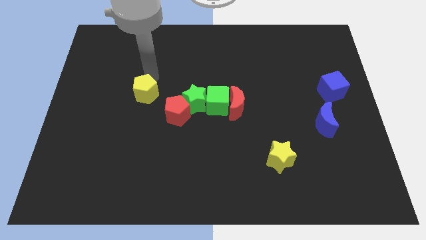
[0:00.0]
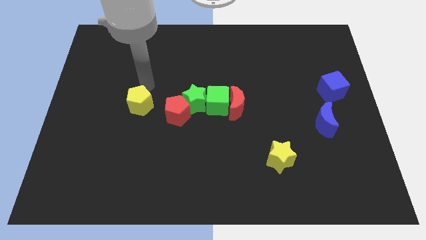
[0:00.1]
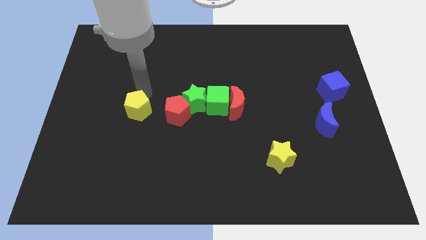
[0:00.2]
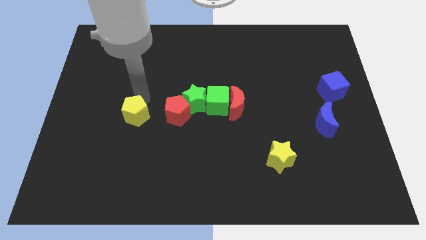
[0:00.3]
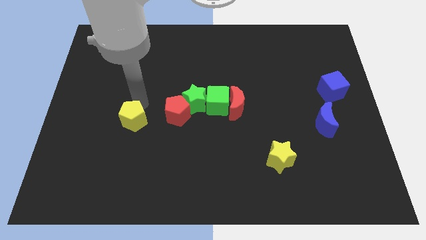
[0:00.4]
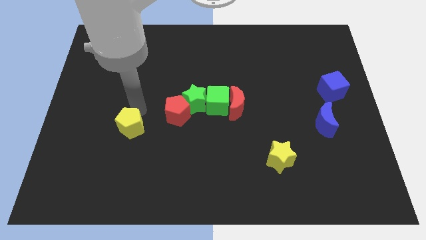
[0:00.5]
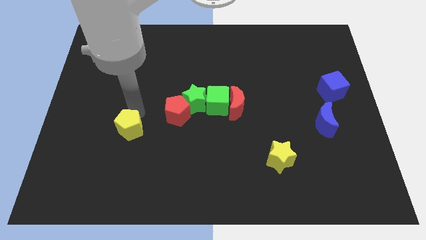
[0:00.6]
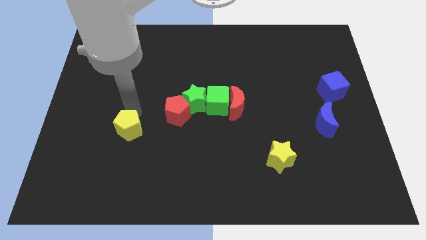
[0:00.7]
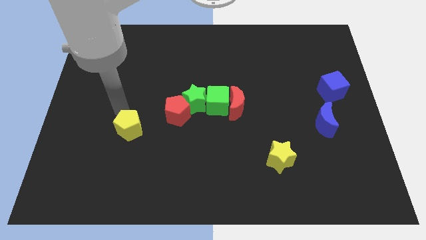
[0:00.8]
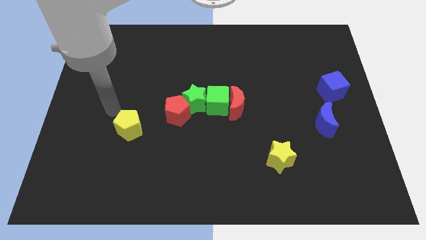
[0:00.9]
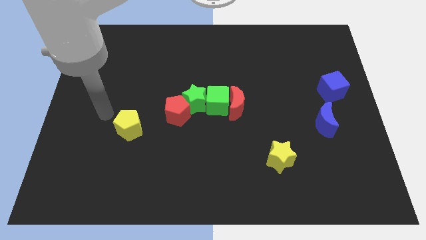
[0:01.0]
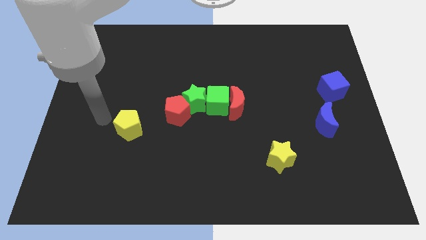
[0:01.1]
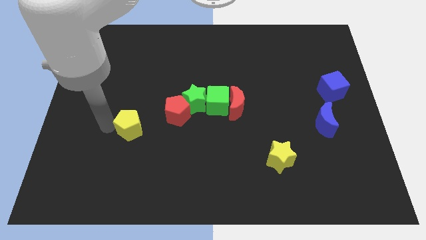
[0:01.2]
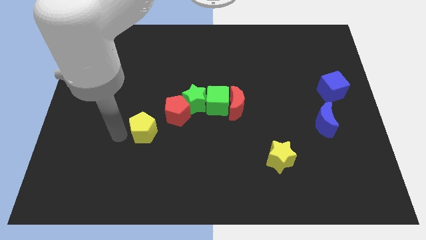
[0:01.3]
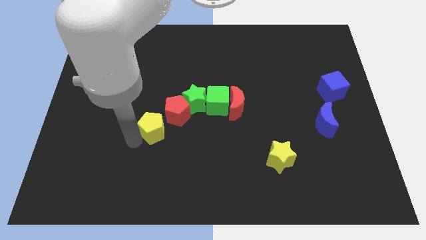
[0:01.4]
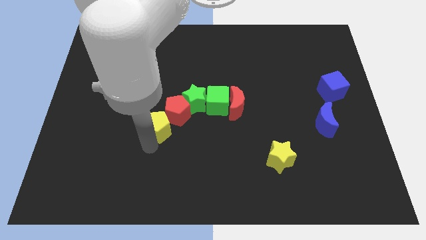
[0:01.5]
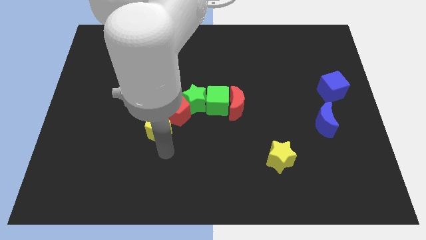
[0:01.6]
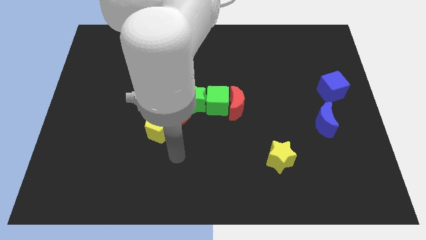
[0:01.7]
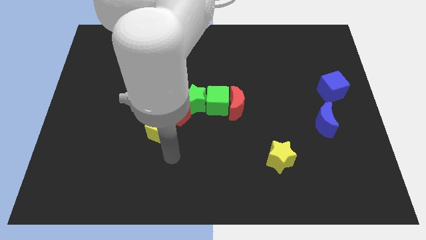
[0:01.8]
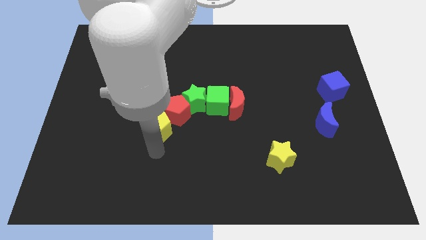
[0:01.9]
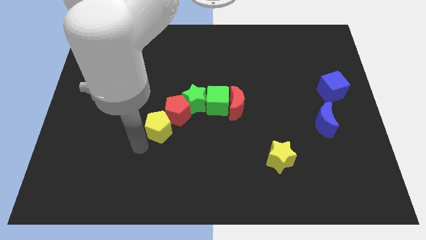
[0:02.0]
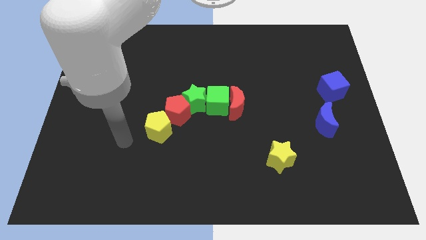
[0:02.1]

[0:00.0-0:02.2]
move the yellow pentagon to the left side of the red pentagon

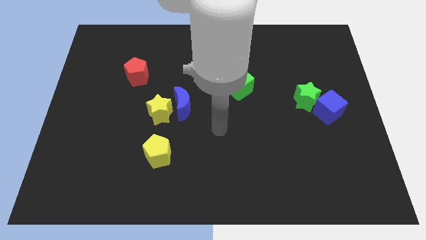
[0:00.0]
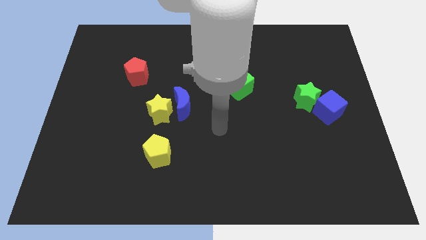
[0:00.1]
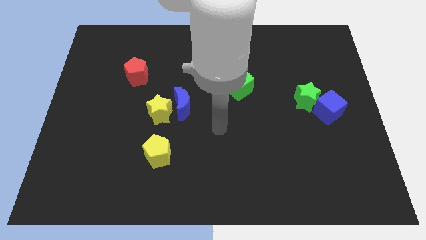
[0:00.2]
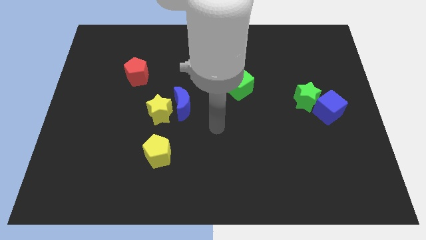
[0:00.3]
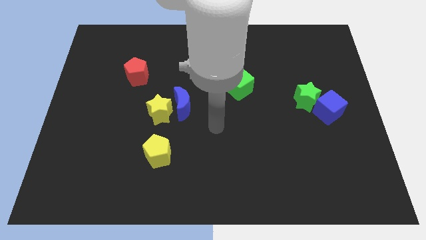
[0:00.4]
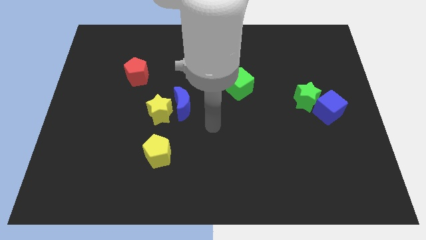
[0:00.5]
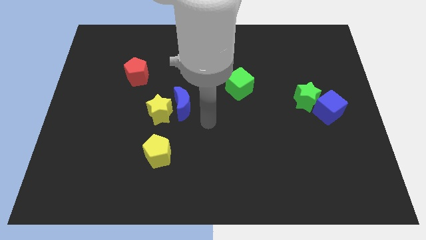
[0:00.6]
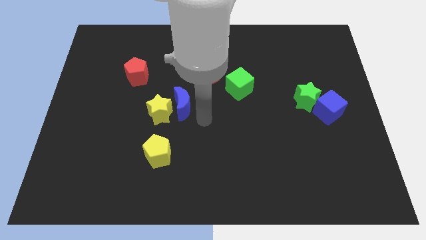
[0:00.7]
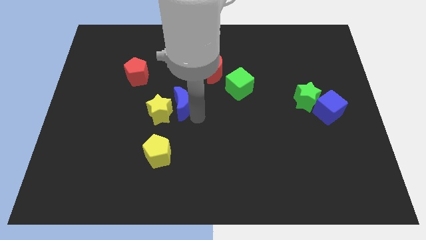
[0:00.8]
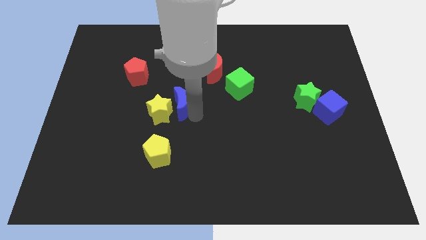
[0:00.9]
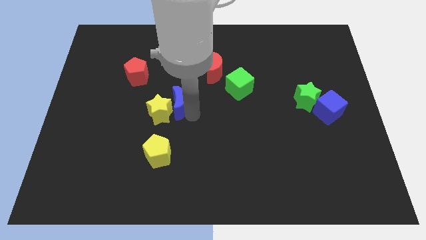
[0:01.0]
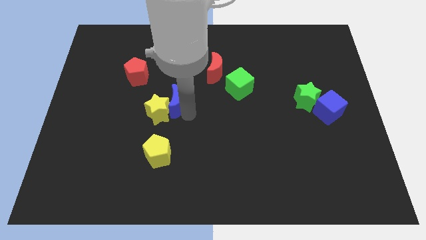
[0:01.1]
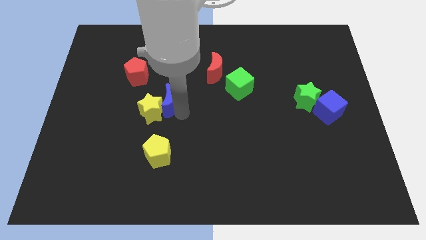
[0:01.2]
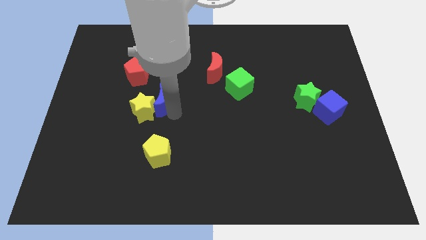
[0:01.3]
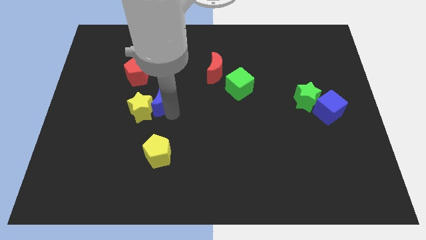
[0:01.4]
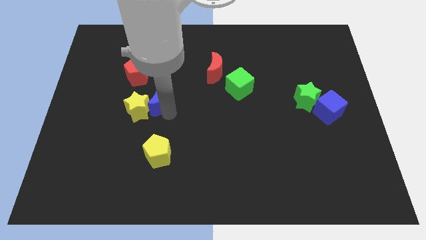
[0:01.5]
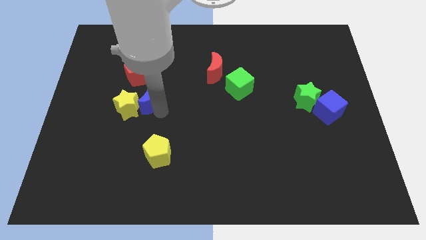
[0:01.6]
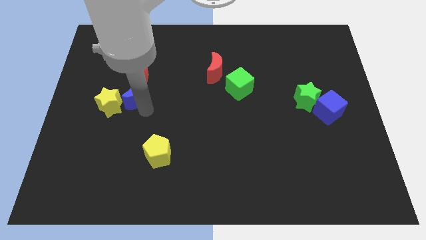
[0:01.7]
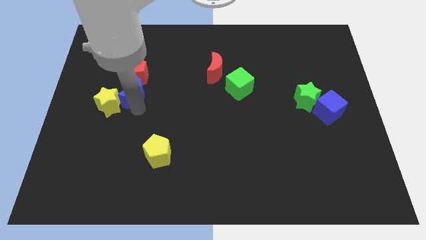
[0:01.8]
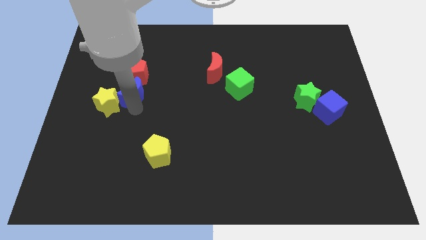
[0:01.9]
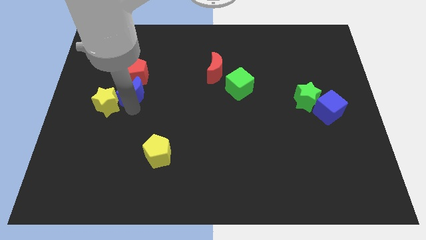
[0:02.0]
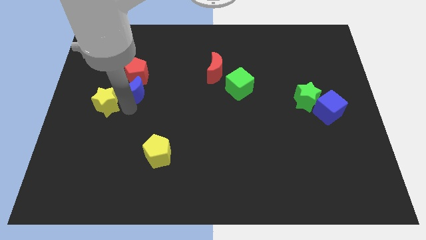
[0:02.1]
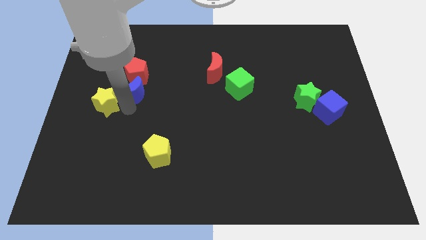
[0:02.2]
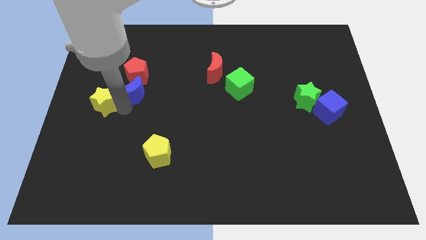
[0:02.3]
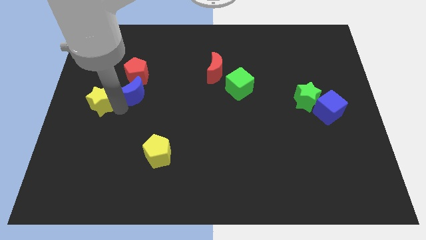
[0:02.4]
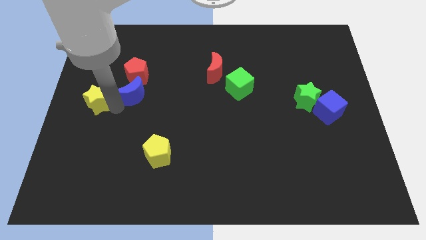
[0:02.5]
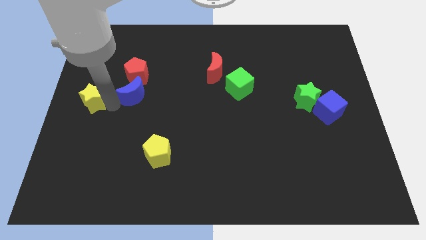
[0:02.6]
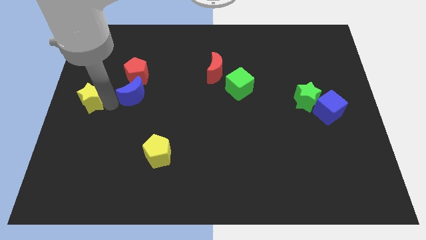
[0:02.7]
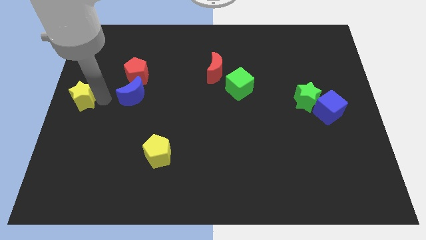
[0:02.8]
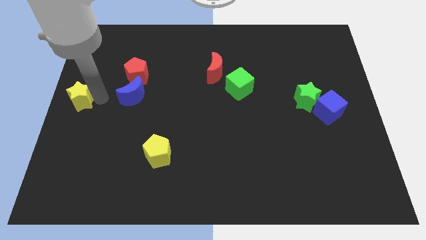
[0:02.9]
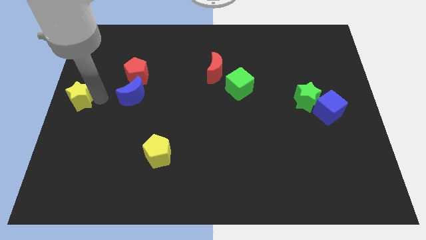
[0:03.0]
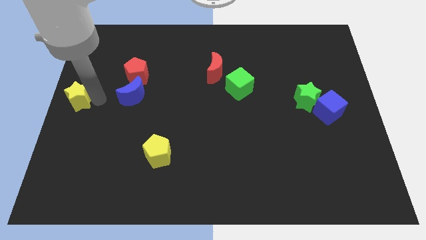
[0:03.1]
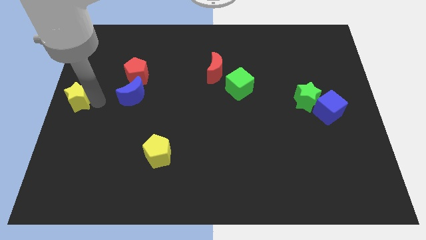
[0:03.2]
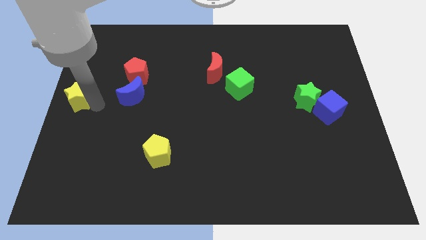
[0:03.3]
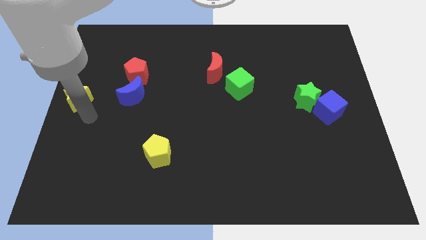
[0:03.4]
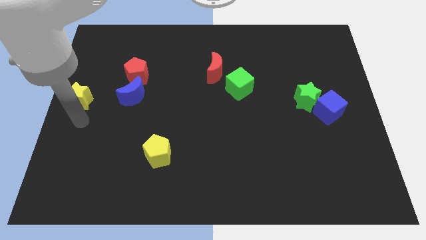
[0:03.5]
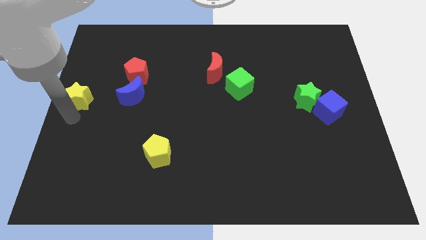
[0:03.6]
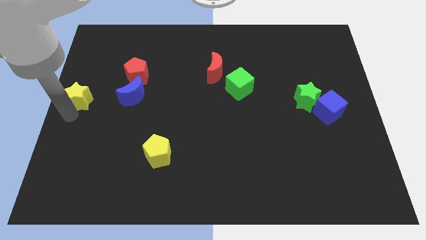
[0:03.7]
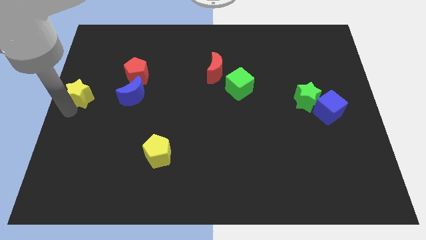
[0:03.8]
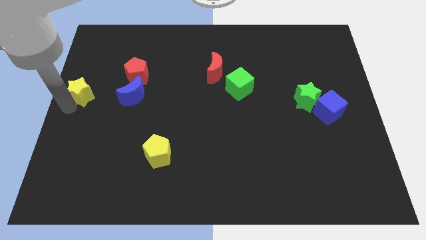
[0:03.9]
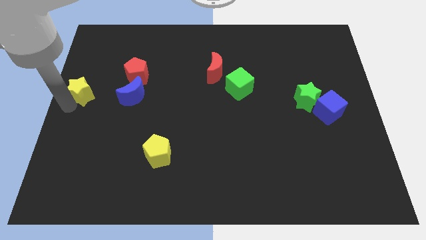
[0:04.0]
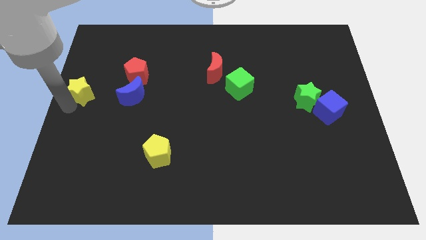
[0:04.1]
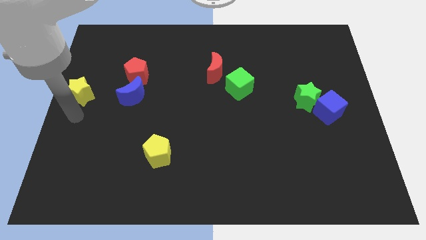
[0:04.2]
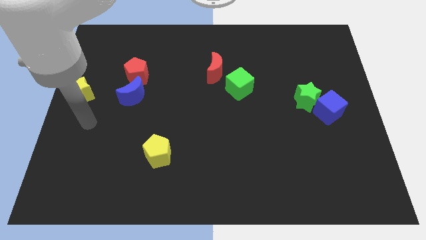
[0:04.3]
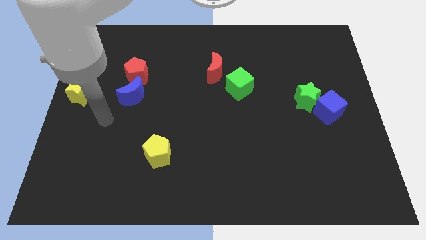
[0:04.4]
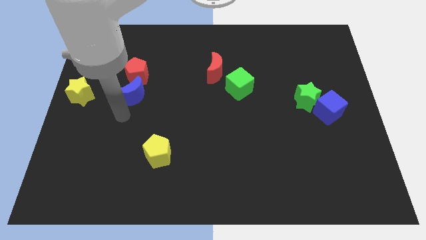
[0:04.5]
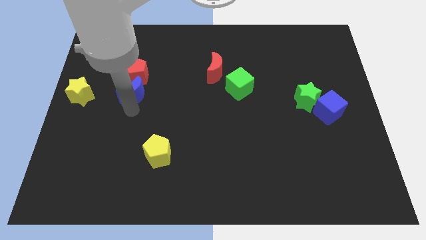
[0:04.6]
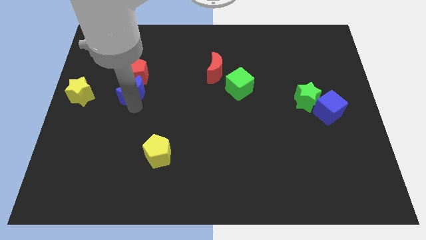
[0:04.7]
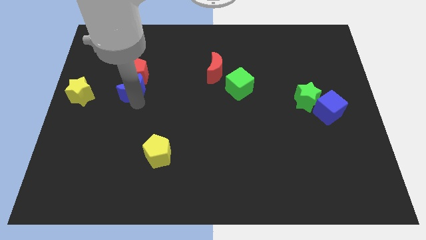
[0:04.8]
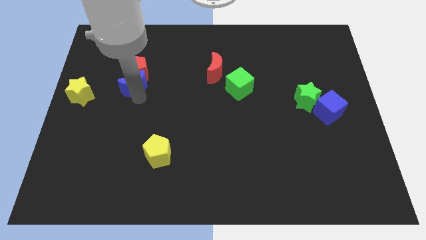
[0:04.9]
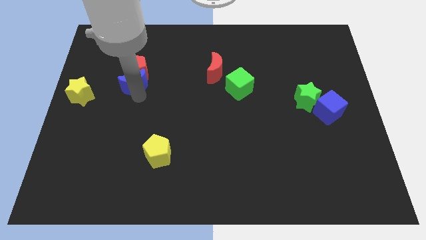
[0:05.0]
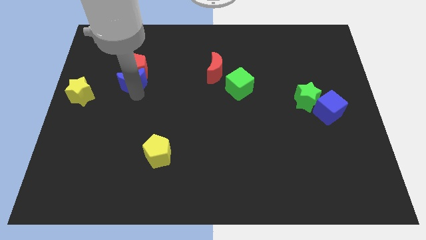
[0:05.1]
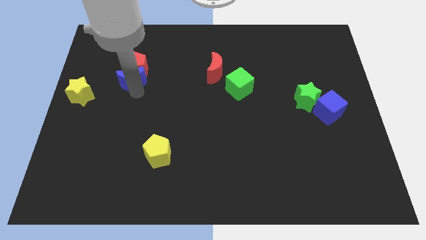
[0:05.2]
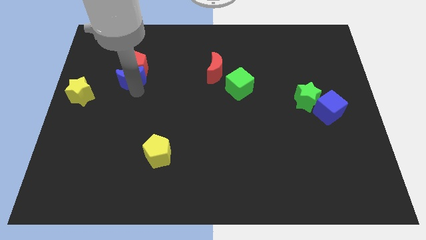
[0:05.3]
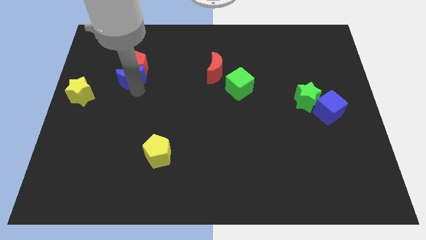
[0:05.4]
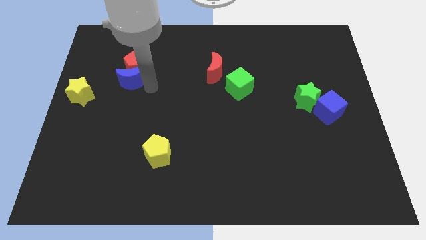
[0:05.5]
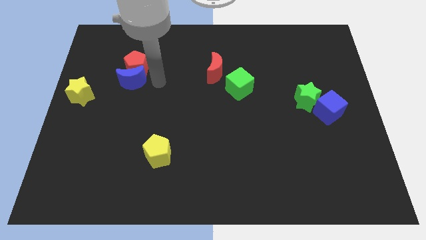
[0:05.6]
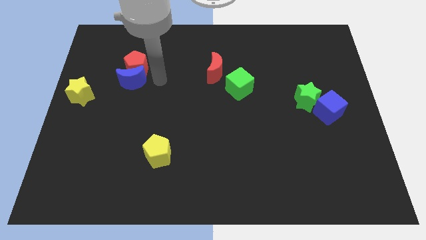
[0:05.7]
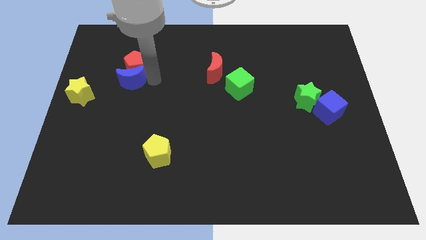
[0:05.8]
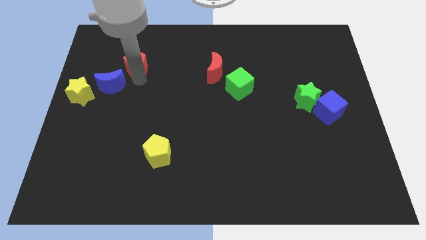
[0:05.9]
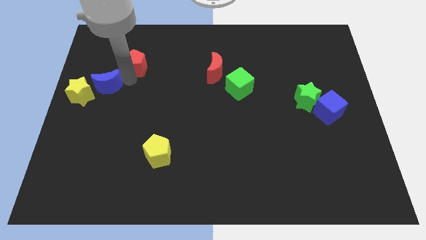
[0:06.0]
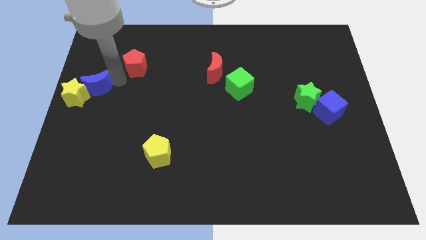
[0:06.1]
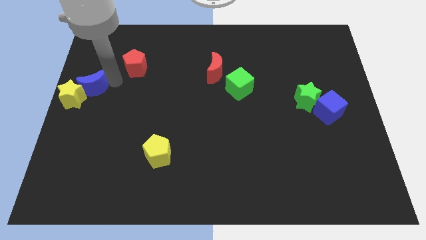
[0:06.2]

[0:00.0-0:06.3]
move the yellow star and the blue moon to the center left of the board

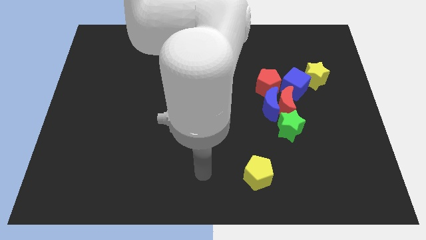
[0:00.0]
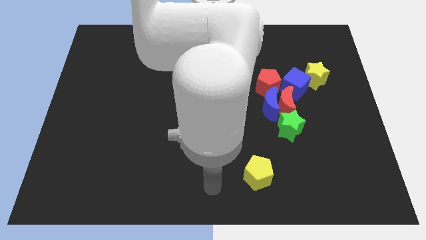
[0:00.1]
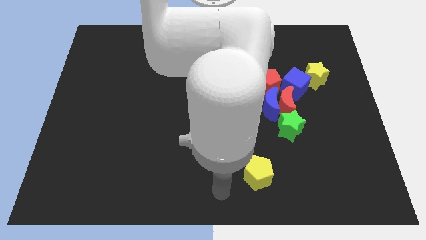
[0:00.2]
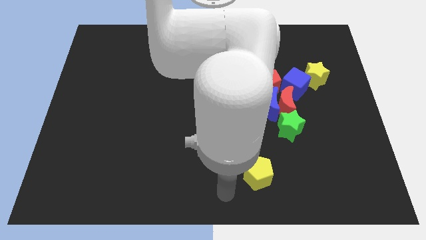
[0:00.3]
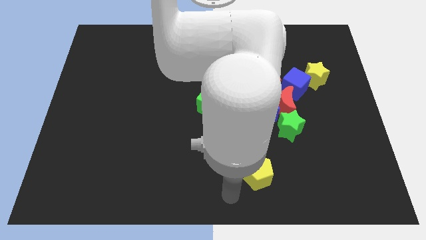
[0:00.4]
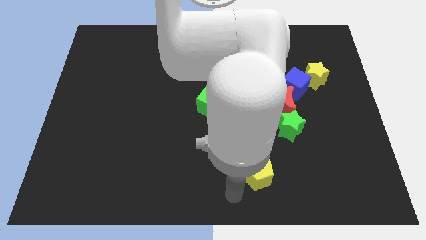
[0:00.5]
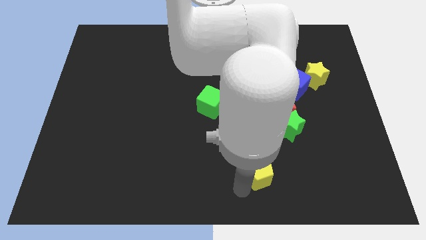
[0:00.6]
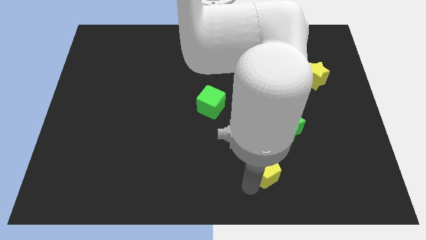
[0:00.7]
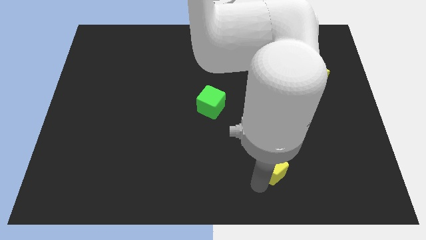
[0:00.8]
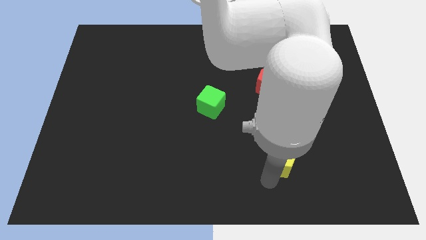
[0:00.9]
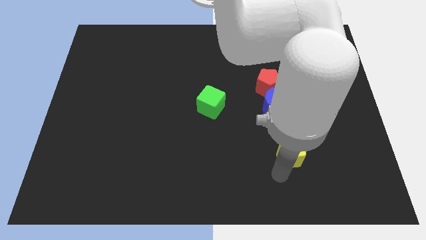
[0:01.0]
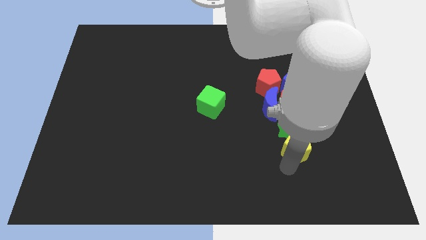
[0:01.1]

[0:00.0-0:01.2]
push the yellow pentagon to the bottom of the green star
